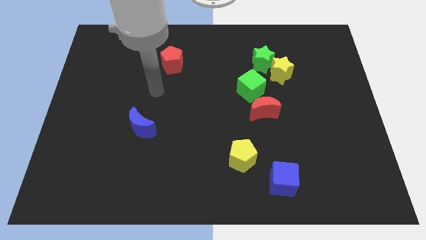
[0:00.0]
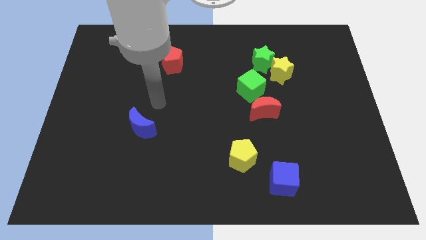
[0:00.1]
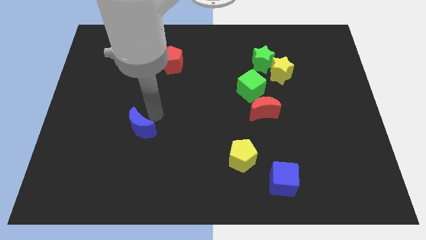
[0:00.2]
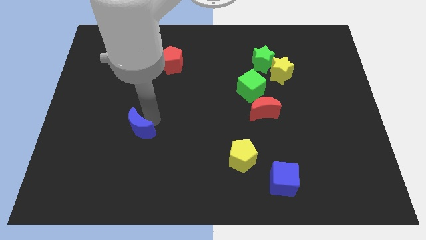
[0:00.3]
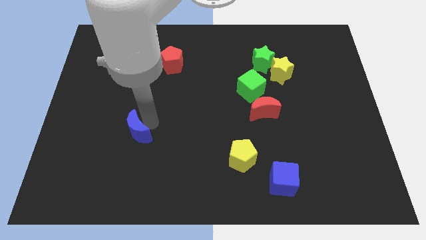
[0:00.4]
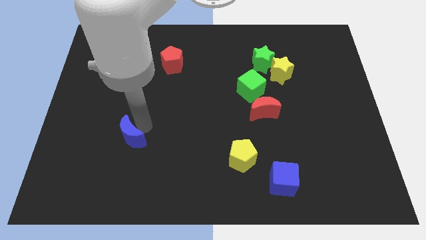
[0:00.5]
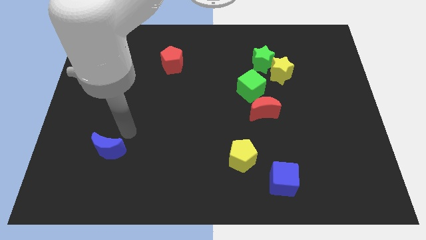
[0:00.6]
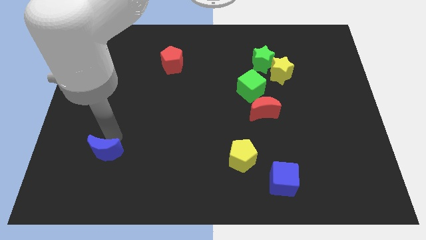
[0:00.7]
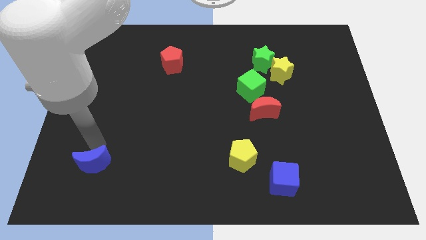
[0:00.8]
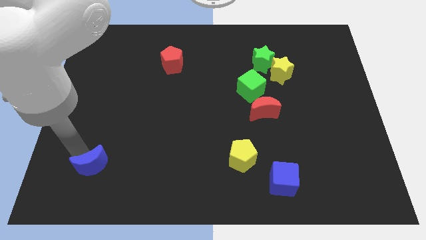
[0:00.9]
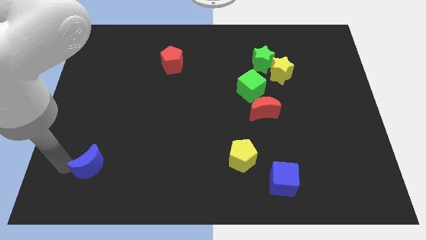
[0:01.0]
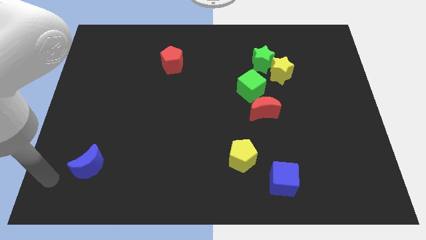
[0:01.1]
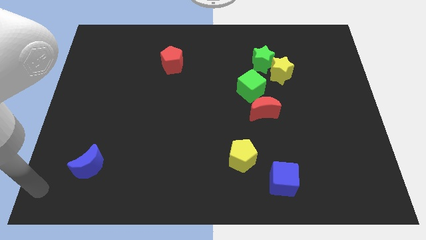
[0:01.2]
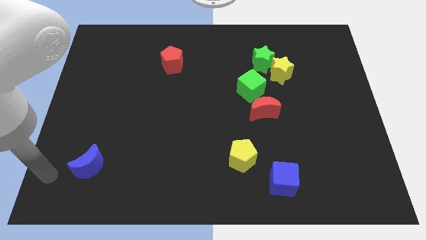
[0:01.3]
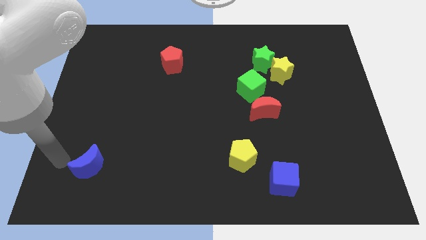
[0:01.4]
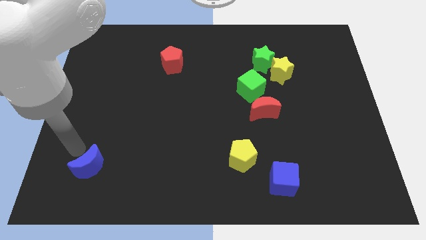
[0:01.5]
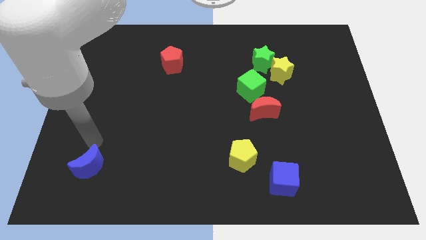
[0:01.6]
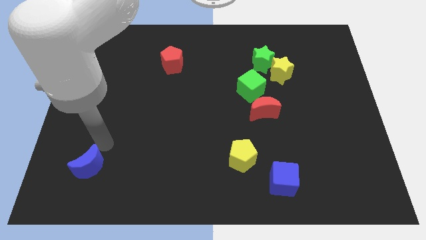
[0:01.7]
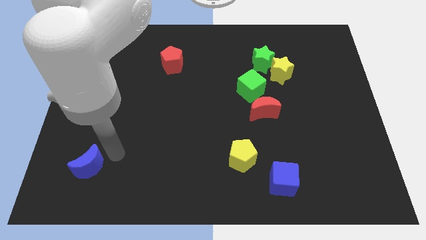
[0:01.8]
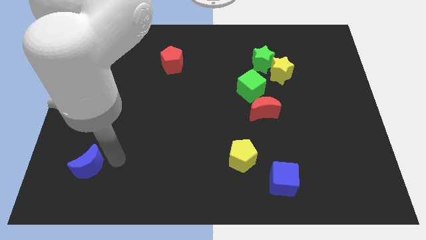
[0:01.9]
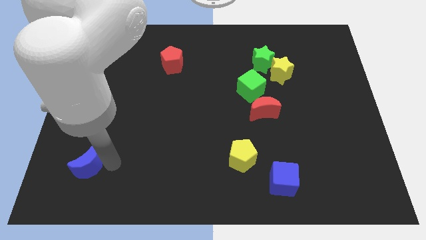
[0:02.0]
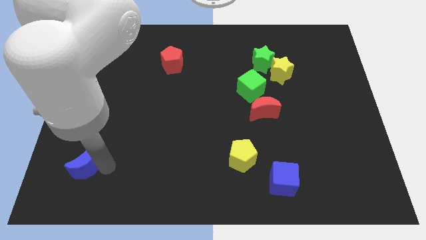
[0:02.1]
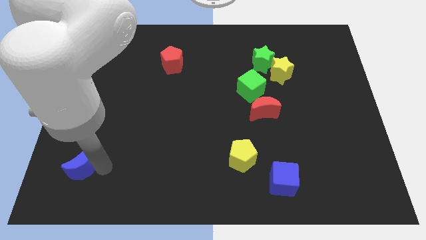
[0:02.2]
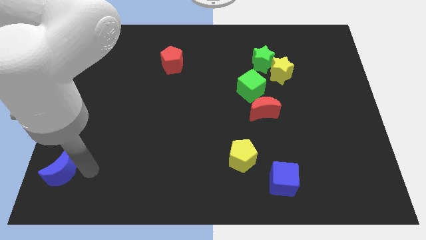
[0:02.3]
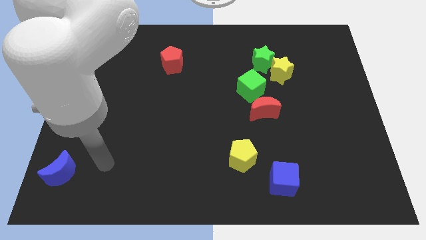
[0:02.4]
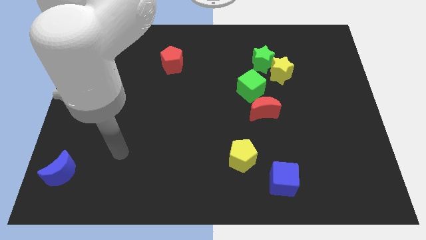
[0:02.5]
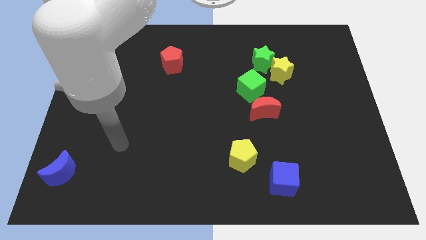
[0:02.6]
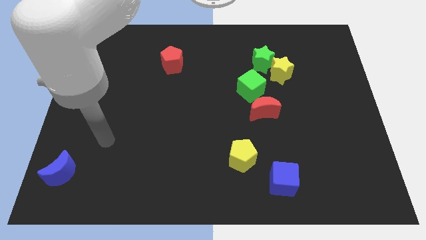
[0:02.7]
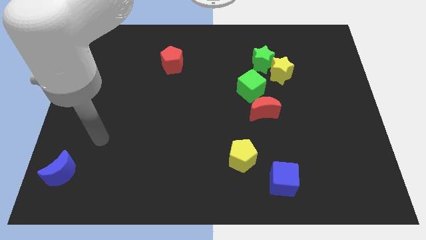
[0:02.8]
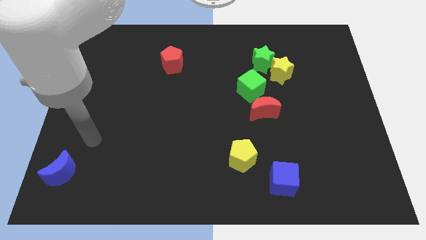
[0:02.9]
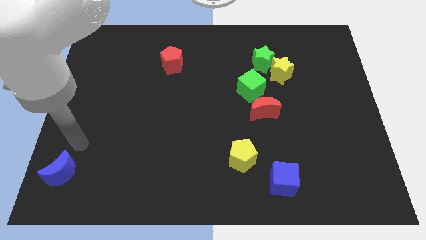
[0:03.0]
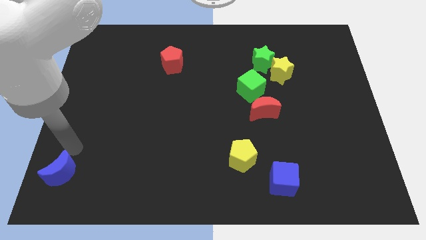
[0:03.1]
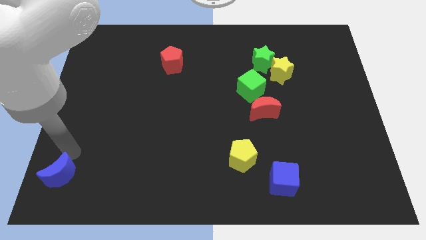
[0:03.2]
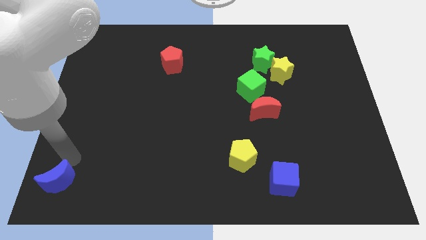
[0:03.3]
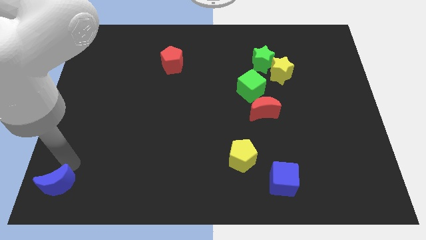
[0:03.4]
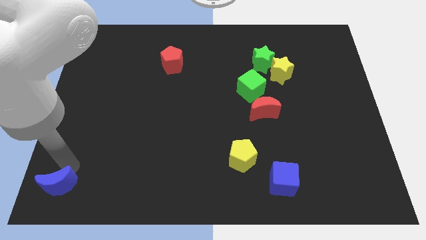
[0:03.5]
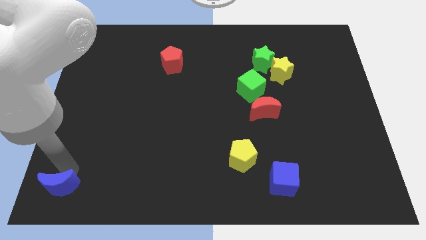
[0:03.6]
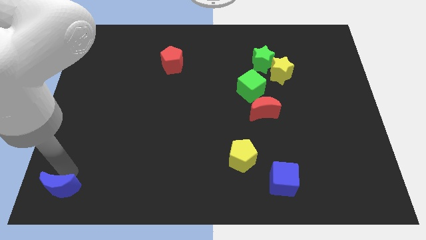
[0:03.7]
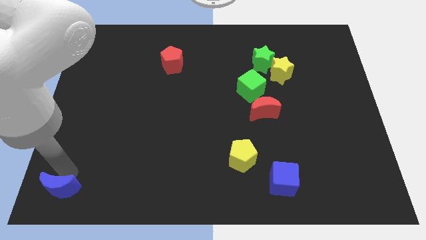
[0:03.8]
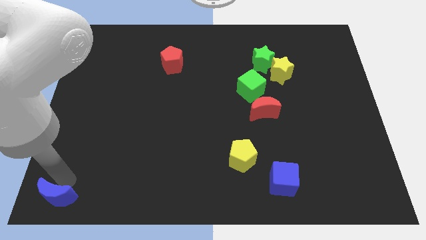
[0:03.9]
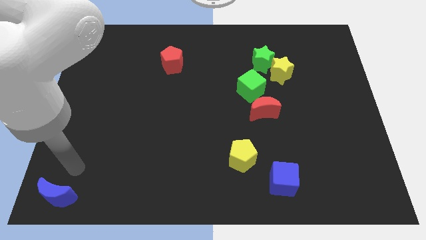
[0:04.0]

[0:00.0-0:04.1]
move blue crescent to bottom left corner

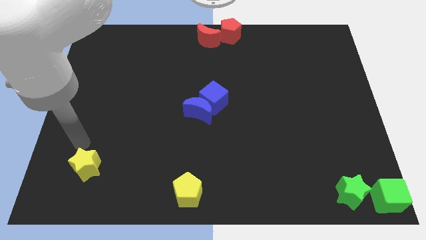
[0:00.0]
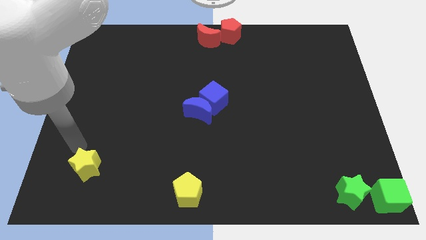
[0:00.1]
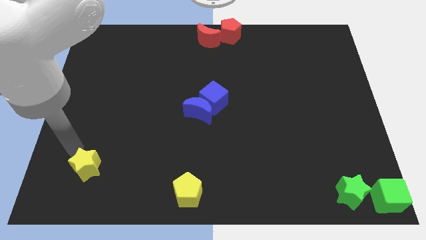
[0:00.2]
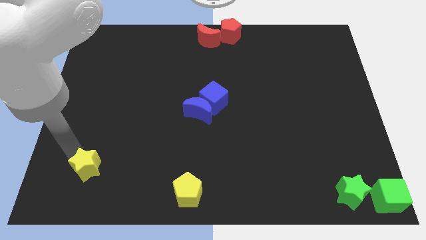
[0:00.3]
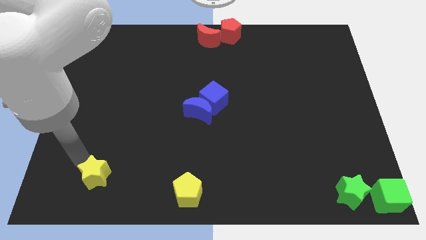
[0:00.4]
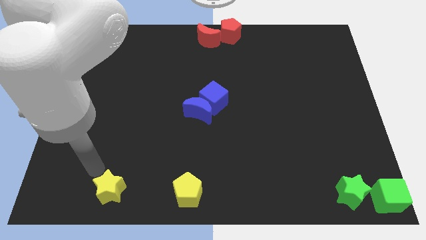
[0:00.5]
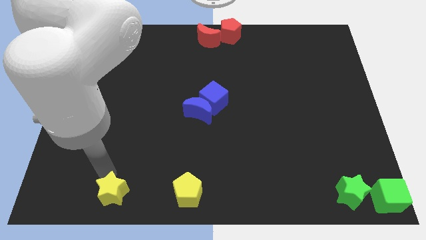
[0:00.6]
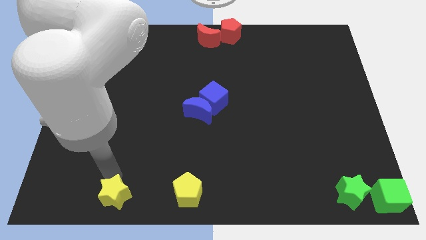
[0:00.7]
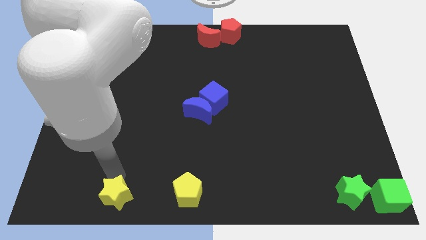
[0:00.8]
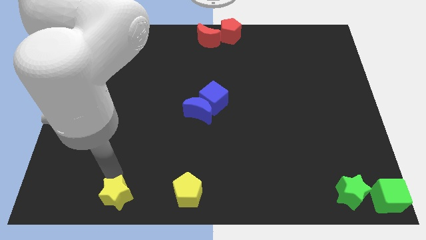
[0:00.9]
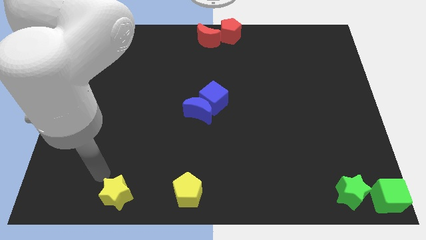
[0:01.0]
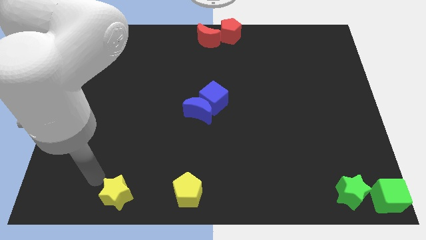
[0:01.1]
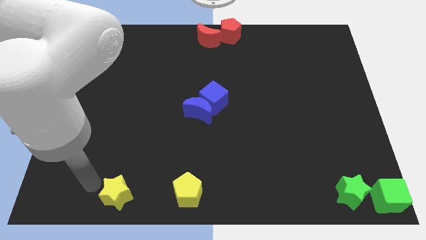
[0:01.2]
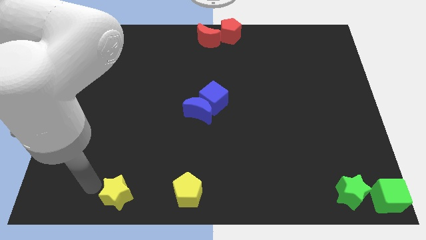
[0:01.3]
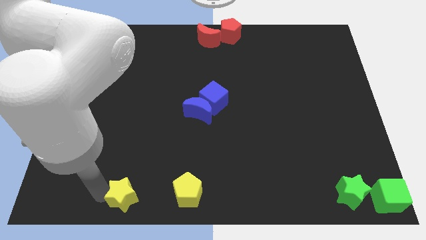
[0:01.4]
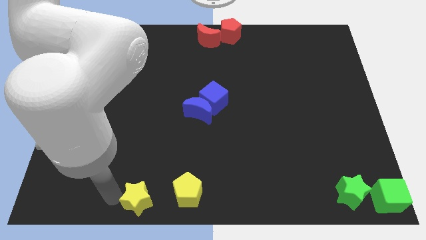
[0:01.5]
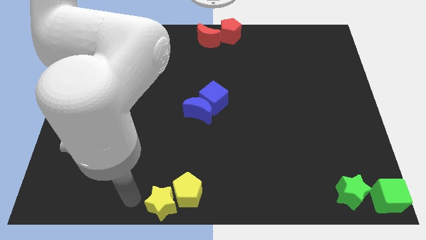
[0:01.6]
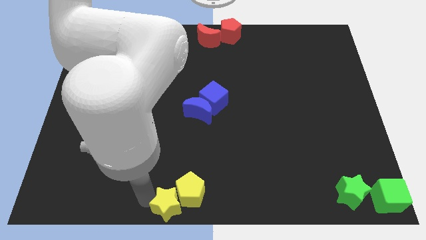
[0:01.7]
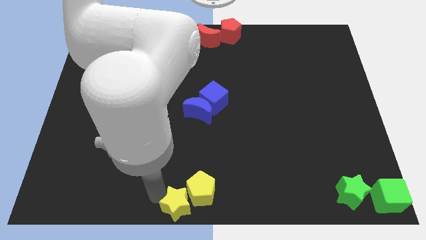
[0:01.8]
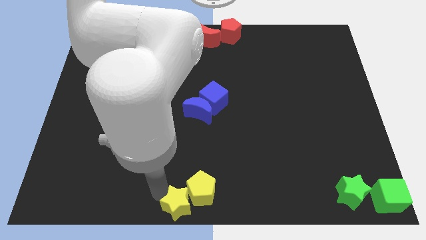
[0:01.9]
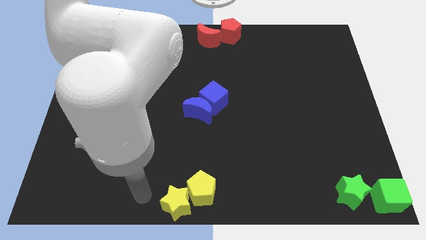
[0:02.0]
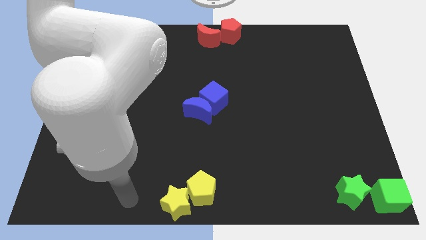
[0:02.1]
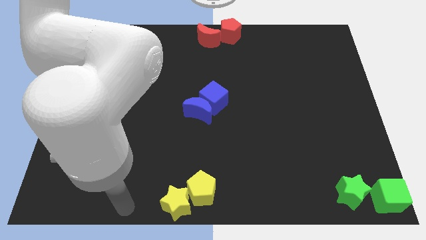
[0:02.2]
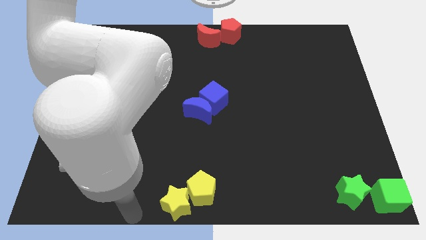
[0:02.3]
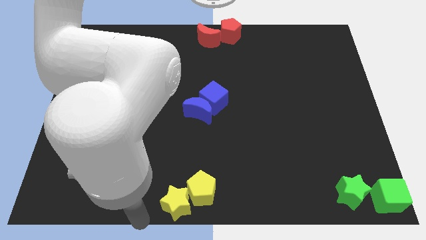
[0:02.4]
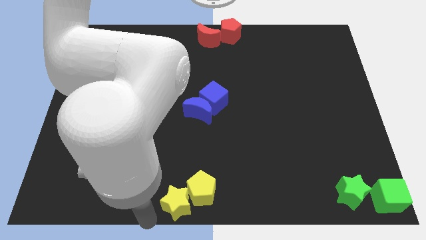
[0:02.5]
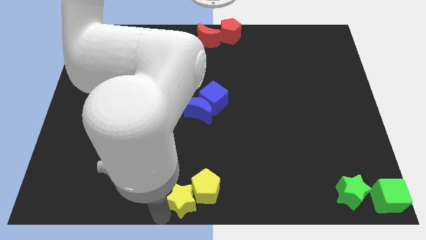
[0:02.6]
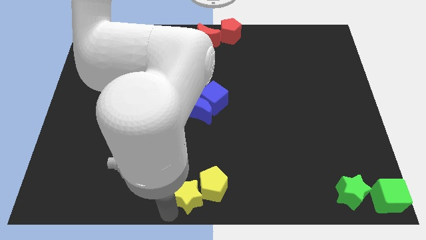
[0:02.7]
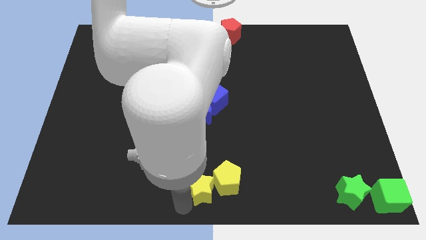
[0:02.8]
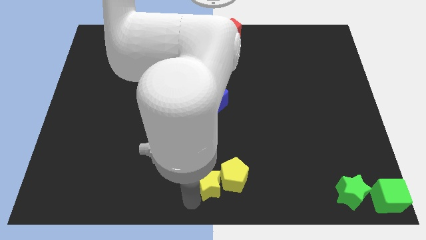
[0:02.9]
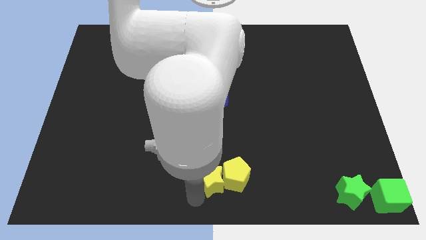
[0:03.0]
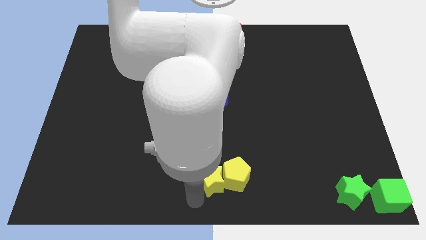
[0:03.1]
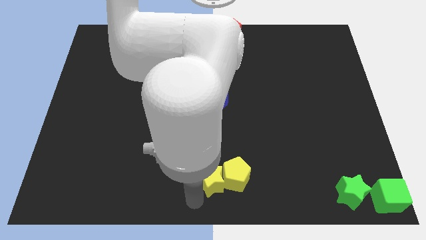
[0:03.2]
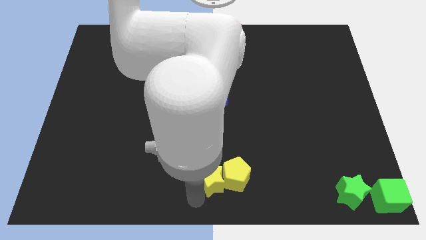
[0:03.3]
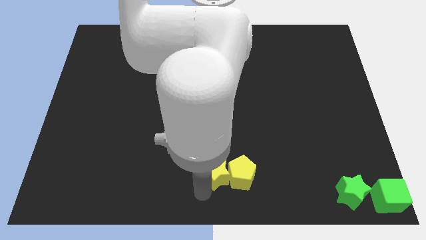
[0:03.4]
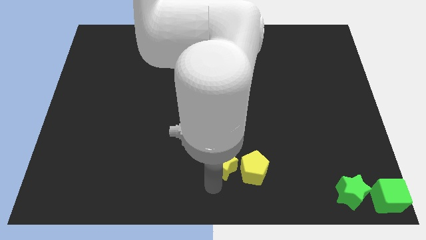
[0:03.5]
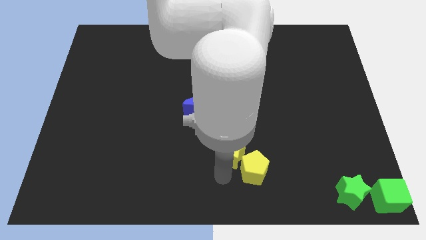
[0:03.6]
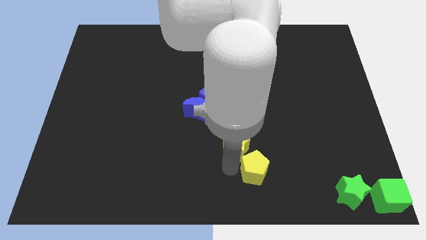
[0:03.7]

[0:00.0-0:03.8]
push the yellow star to the left of the yellow pentagon

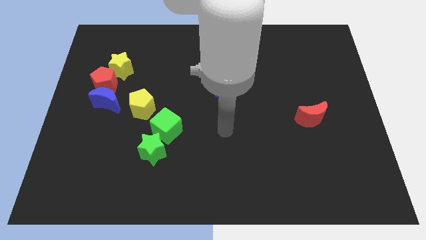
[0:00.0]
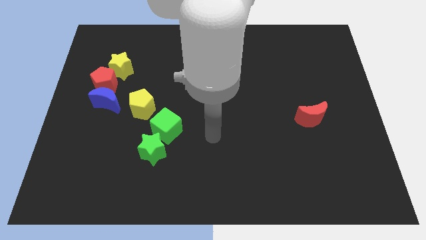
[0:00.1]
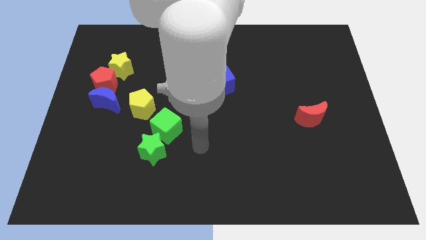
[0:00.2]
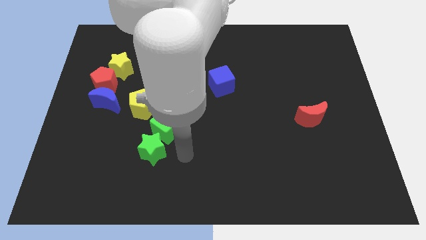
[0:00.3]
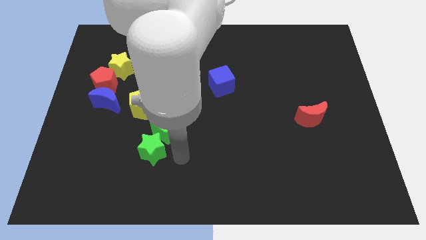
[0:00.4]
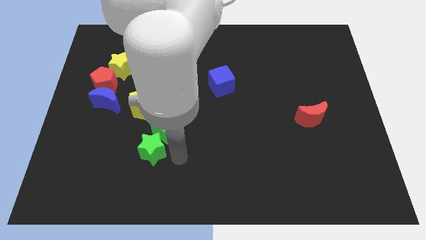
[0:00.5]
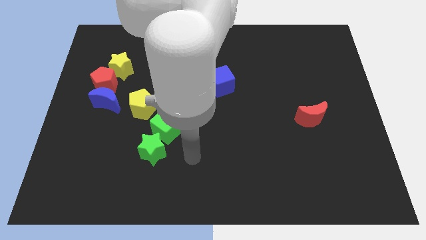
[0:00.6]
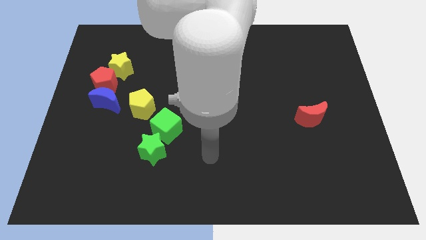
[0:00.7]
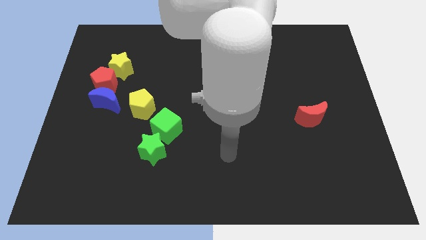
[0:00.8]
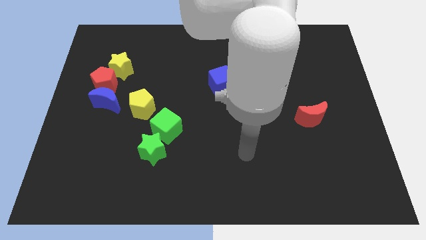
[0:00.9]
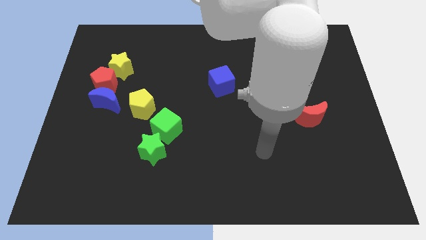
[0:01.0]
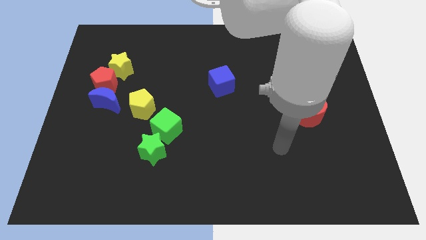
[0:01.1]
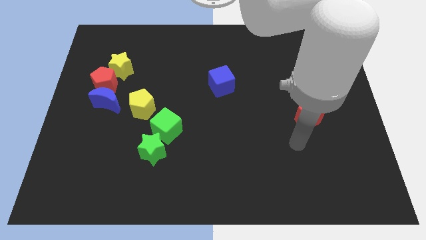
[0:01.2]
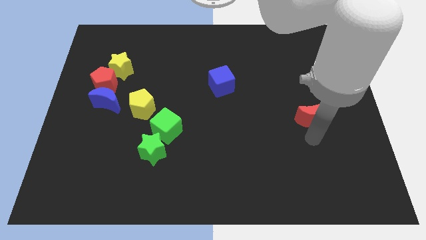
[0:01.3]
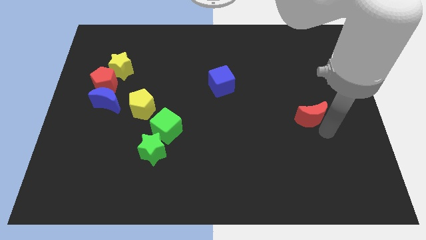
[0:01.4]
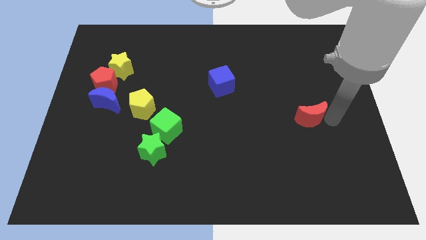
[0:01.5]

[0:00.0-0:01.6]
place your arm at the bottom of red crescent
